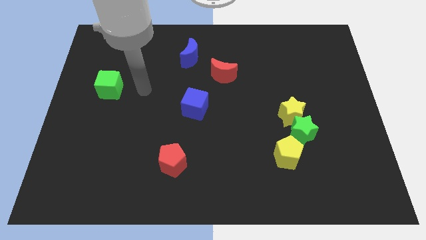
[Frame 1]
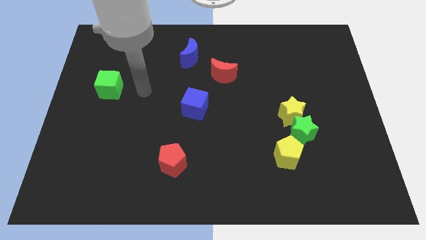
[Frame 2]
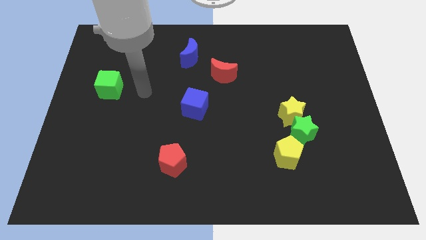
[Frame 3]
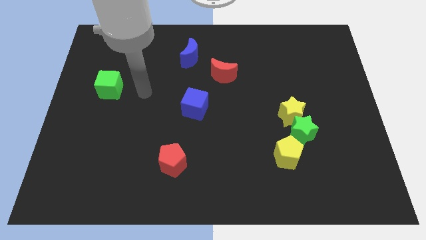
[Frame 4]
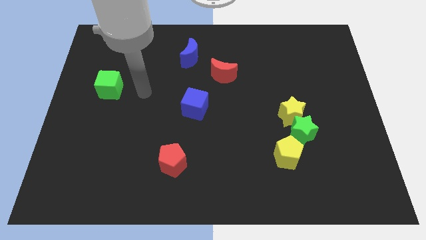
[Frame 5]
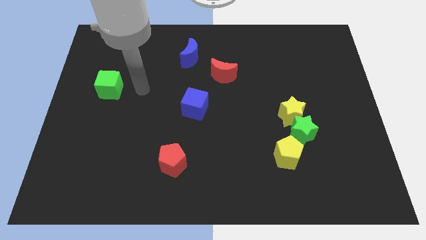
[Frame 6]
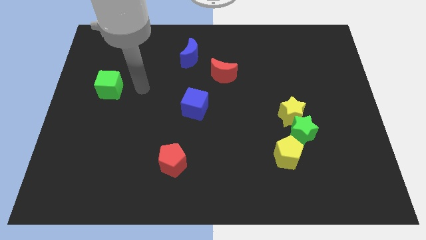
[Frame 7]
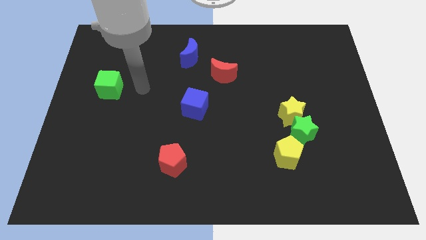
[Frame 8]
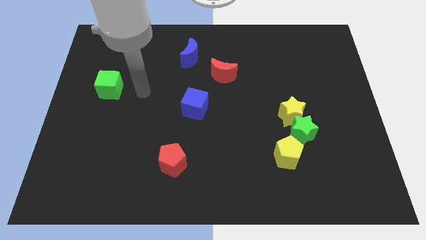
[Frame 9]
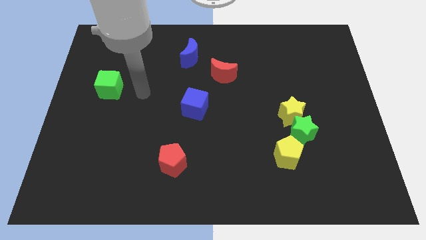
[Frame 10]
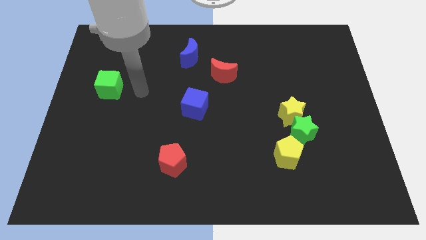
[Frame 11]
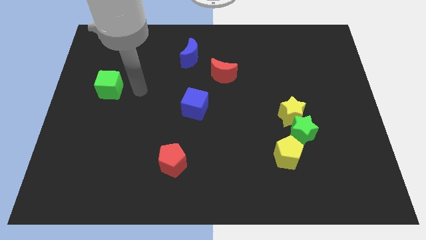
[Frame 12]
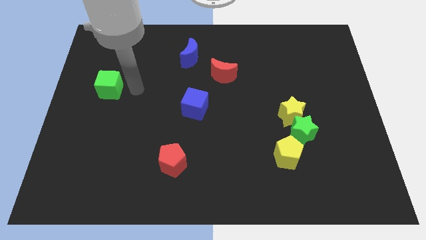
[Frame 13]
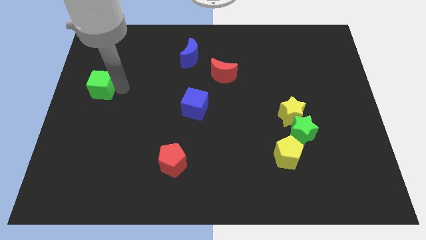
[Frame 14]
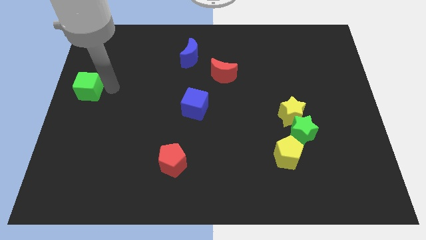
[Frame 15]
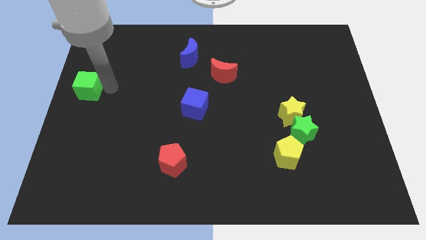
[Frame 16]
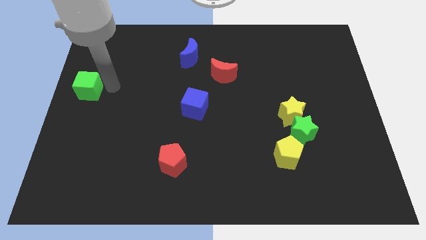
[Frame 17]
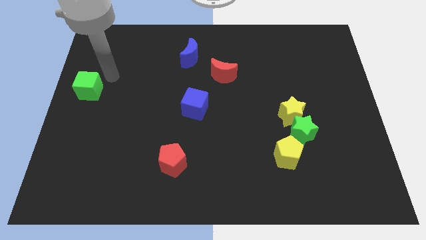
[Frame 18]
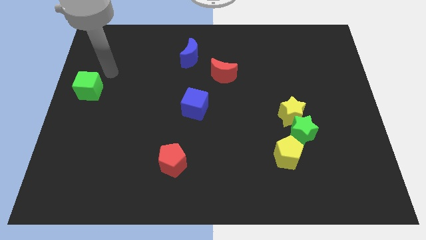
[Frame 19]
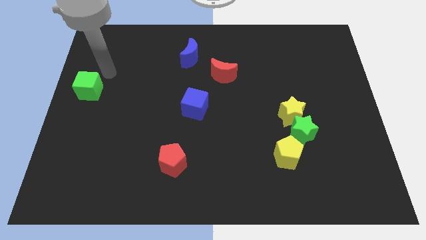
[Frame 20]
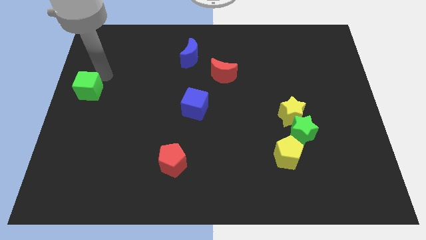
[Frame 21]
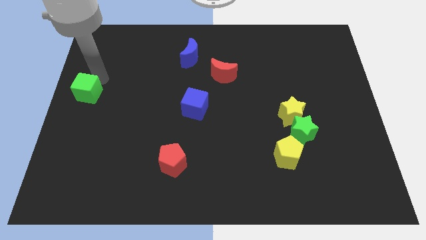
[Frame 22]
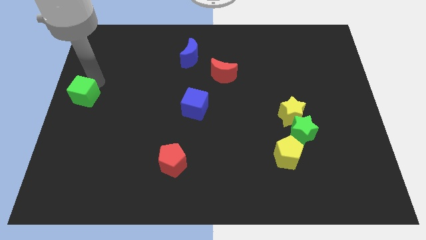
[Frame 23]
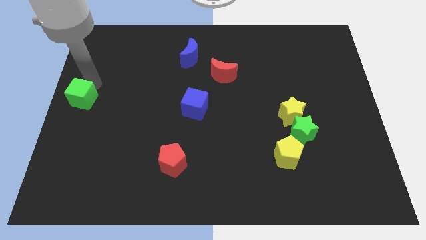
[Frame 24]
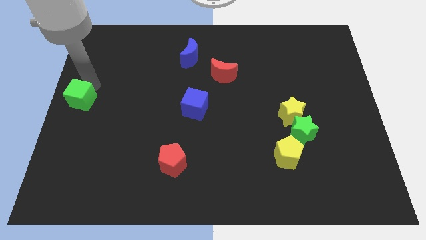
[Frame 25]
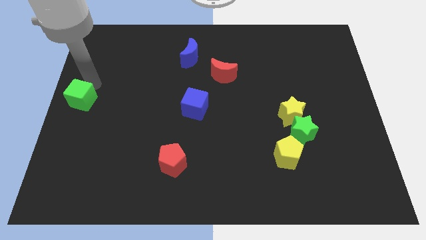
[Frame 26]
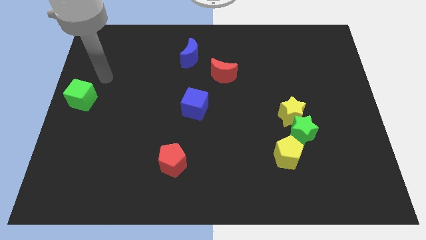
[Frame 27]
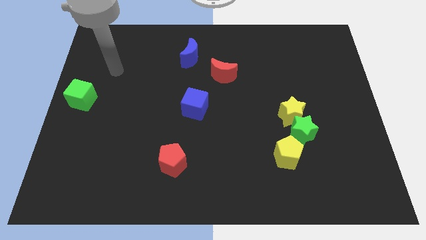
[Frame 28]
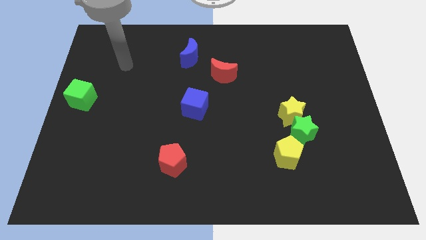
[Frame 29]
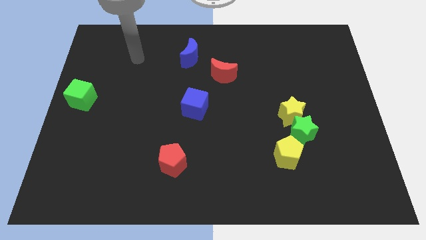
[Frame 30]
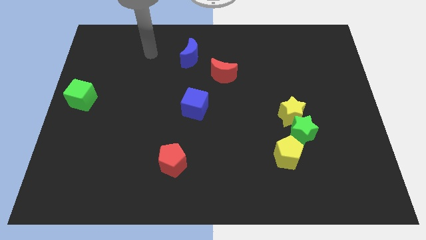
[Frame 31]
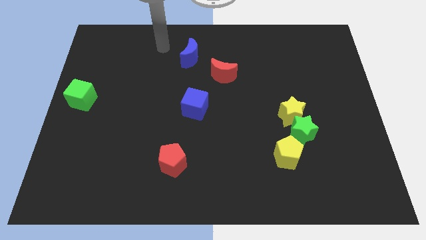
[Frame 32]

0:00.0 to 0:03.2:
move green cube towards center left

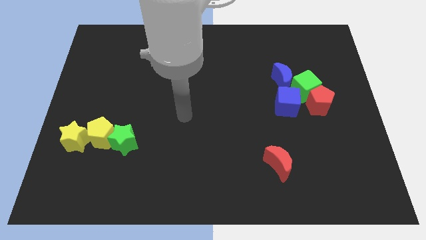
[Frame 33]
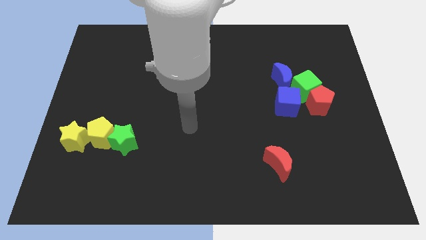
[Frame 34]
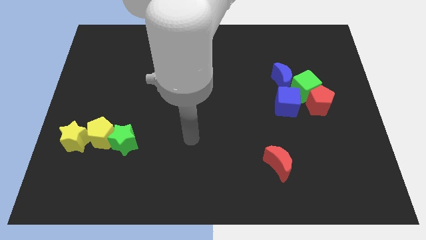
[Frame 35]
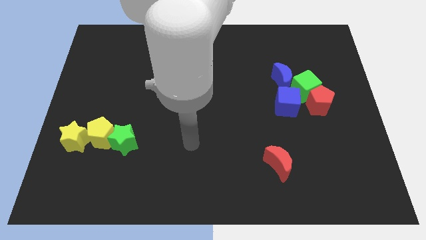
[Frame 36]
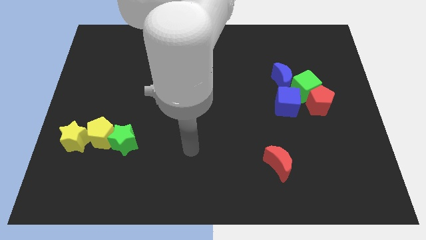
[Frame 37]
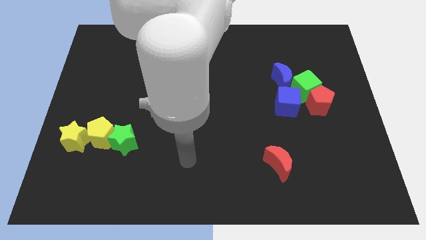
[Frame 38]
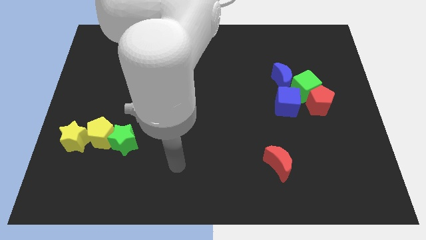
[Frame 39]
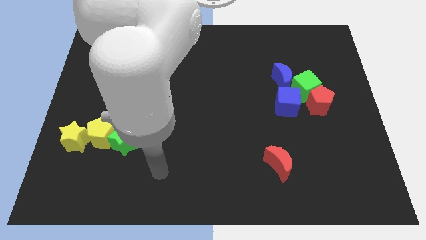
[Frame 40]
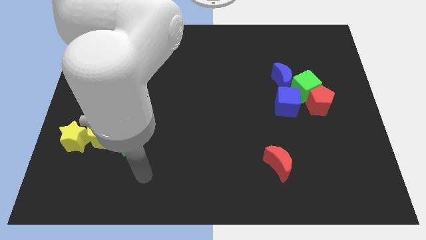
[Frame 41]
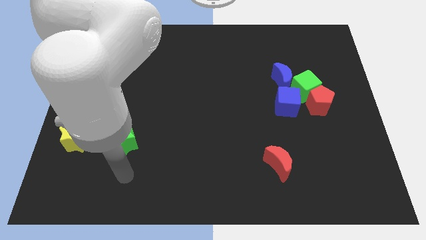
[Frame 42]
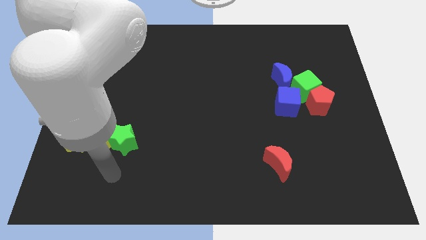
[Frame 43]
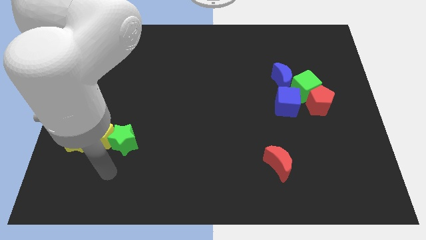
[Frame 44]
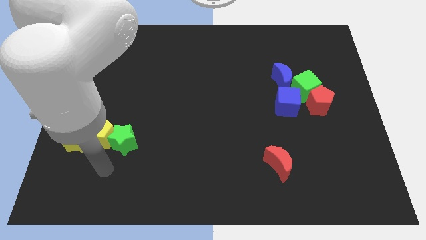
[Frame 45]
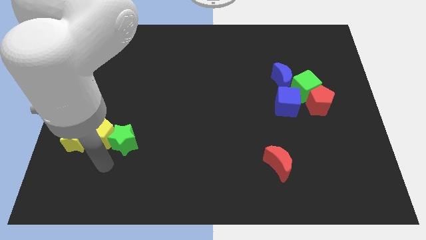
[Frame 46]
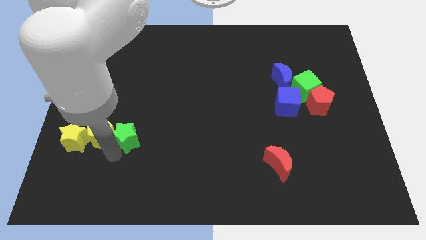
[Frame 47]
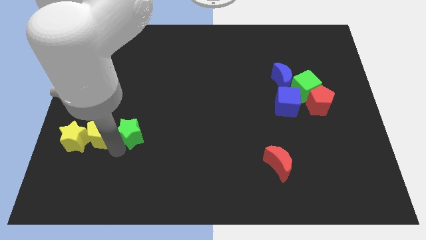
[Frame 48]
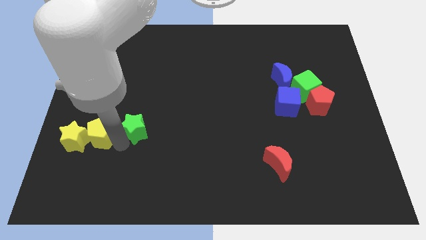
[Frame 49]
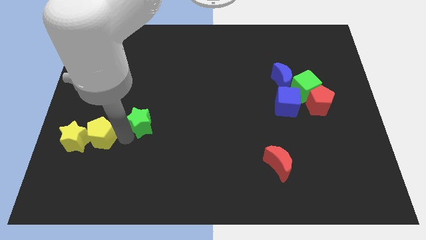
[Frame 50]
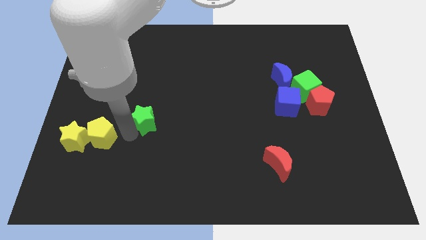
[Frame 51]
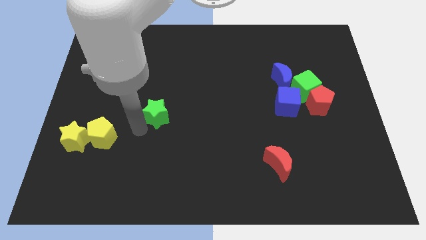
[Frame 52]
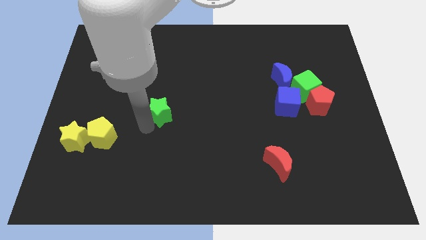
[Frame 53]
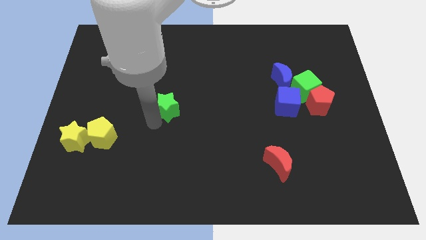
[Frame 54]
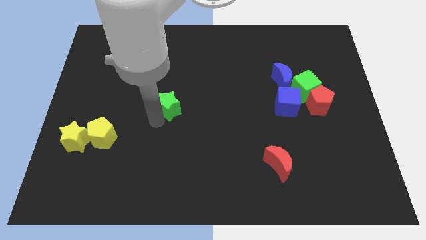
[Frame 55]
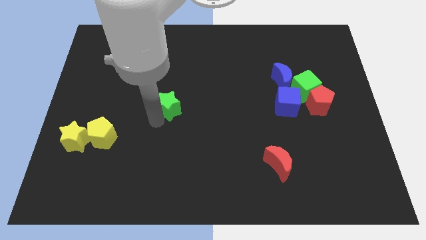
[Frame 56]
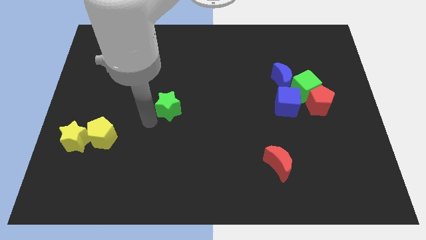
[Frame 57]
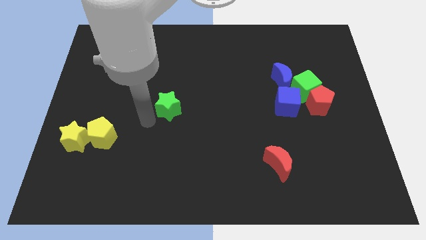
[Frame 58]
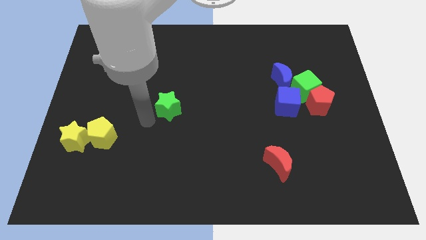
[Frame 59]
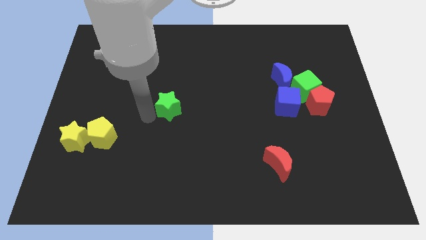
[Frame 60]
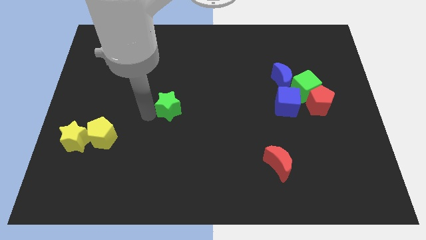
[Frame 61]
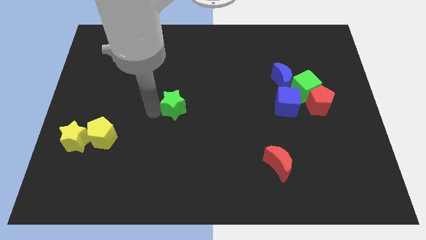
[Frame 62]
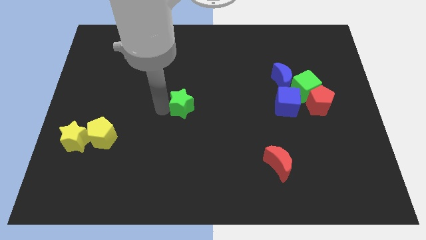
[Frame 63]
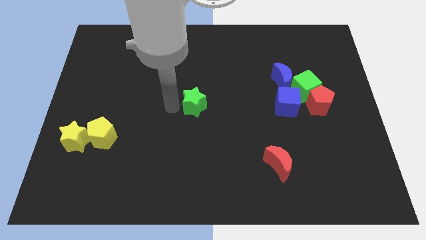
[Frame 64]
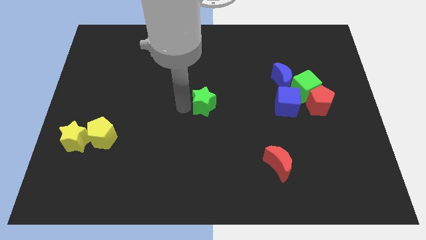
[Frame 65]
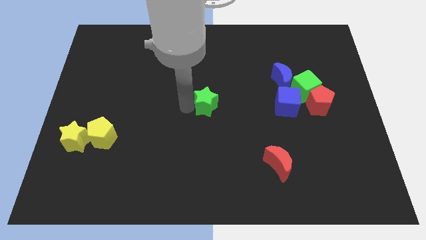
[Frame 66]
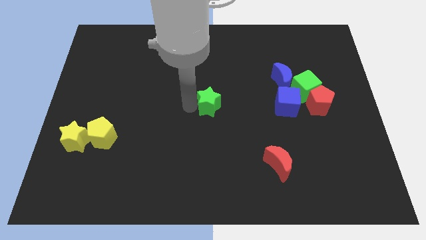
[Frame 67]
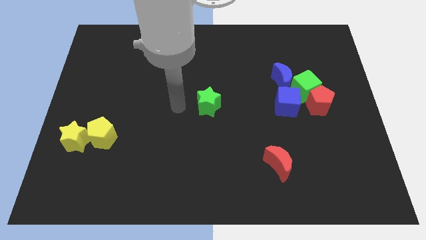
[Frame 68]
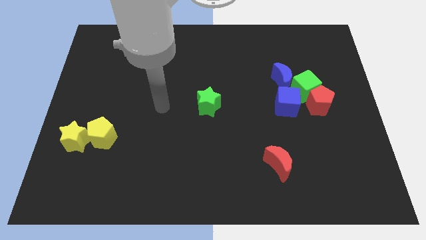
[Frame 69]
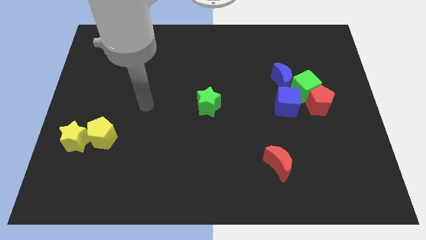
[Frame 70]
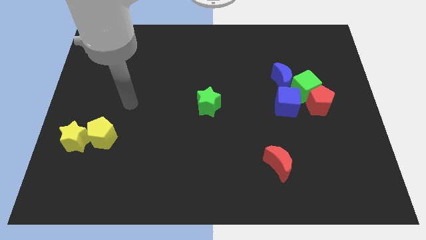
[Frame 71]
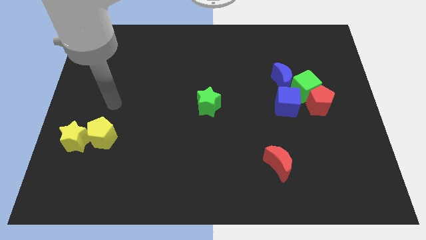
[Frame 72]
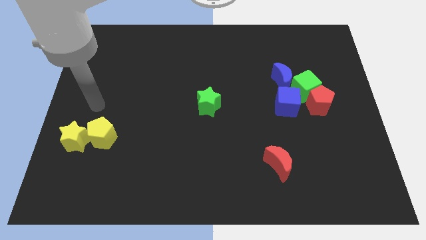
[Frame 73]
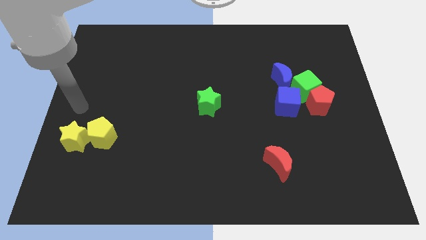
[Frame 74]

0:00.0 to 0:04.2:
push the green star to the center of the board

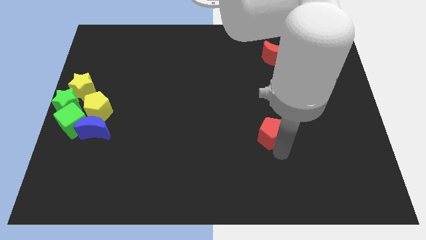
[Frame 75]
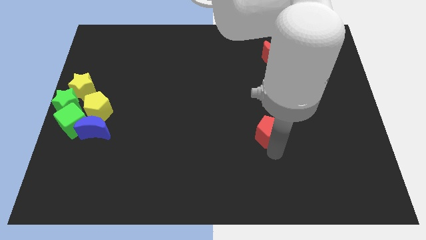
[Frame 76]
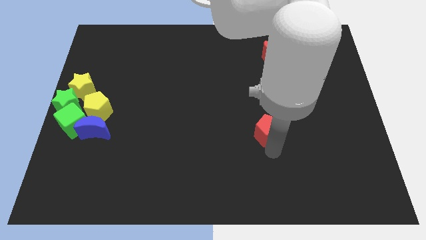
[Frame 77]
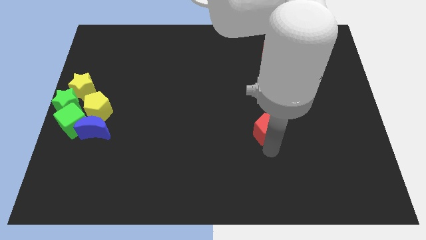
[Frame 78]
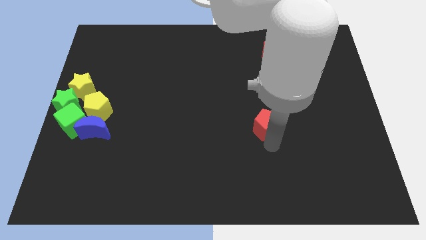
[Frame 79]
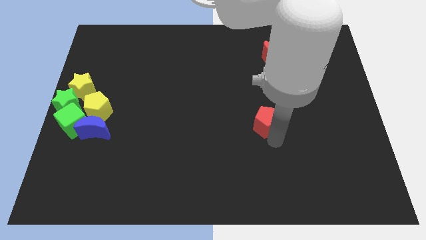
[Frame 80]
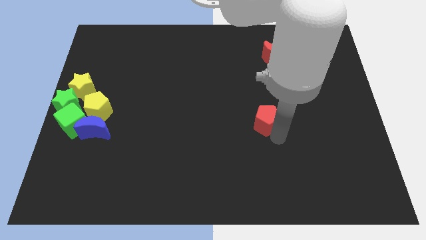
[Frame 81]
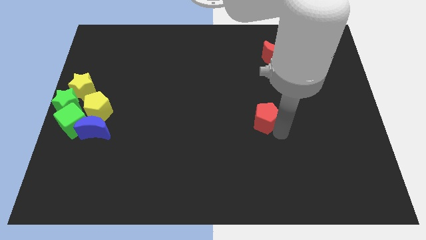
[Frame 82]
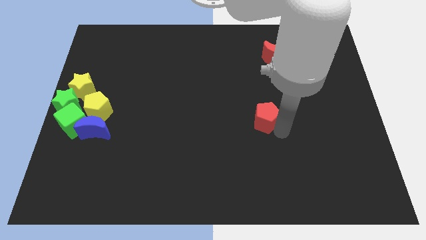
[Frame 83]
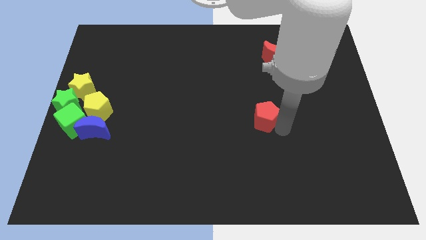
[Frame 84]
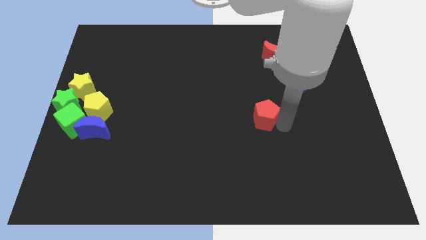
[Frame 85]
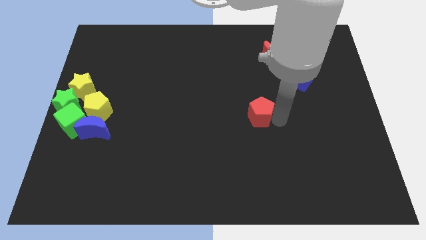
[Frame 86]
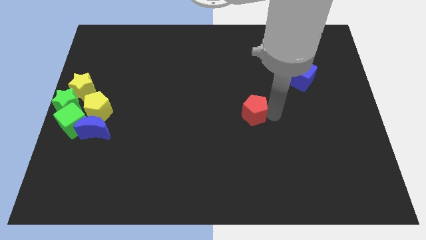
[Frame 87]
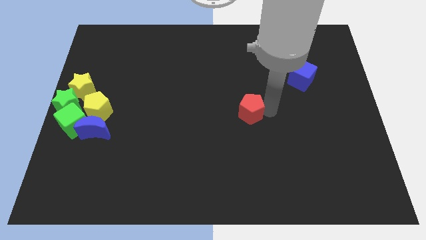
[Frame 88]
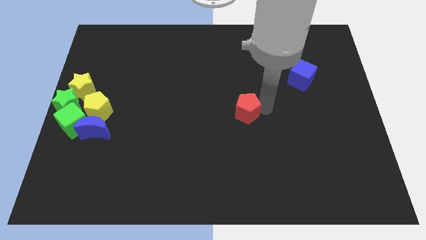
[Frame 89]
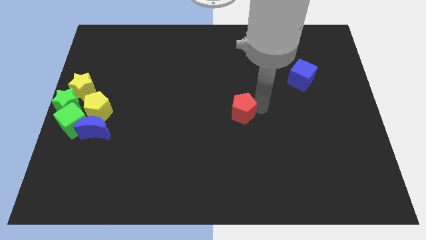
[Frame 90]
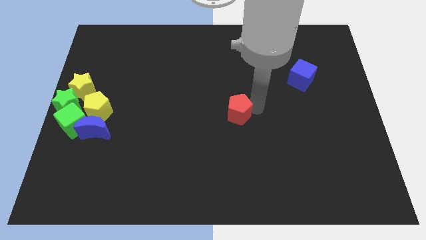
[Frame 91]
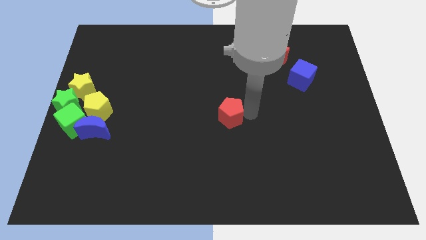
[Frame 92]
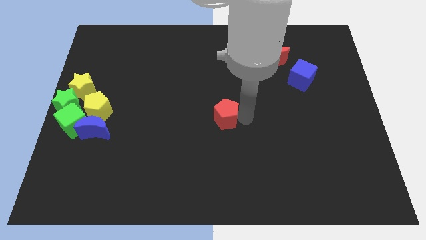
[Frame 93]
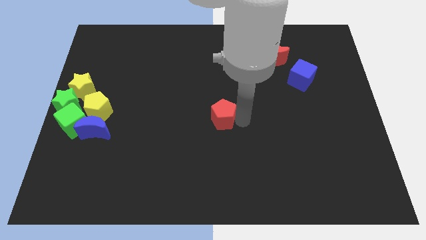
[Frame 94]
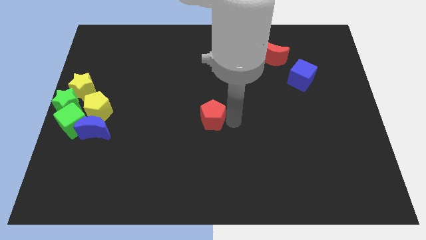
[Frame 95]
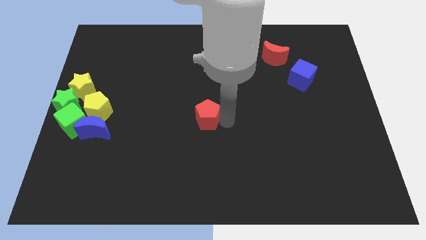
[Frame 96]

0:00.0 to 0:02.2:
place the red pentagon at center of the board
